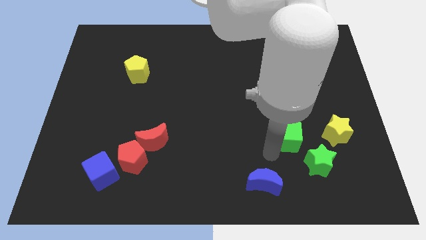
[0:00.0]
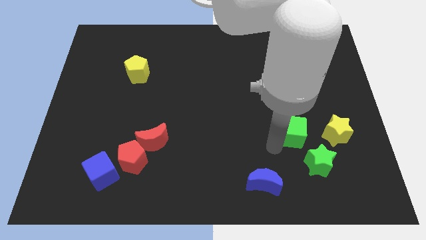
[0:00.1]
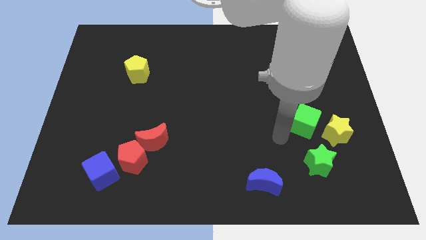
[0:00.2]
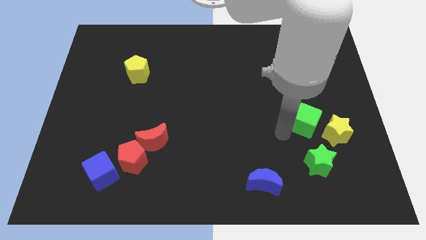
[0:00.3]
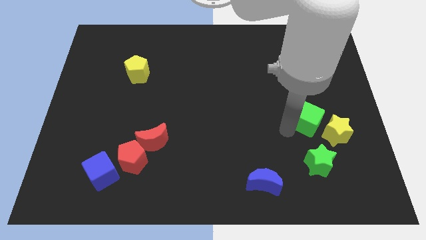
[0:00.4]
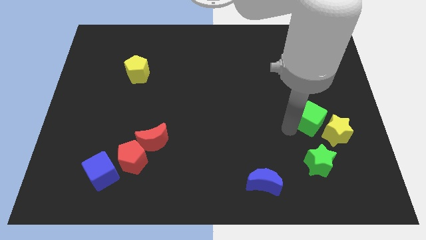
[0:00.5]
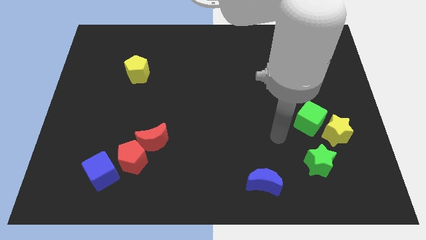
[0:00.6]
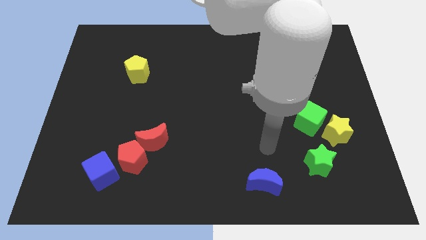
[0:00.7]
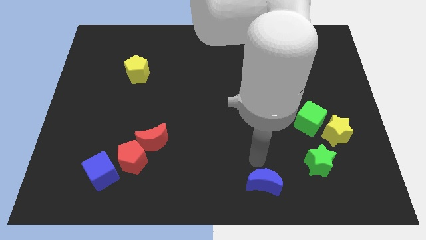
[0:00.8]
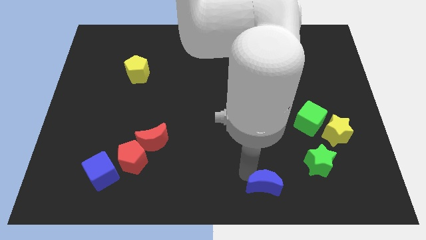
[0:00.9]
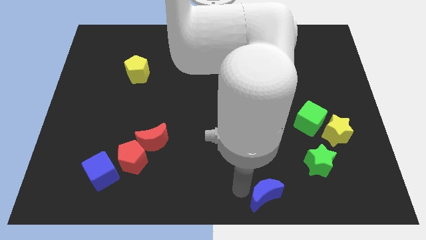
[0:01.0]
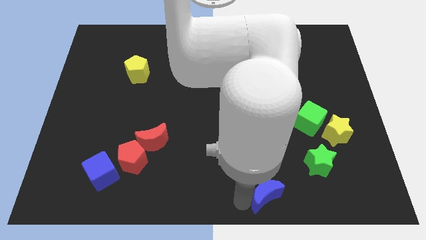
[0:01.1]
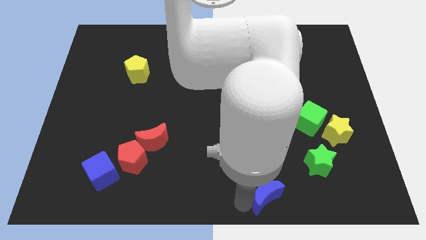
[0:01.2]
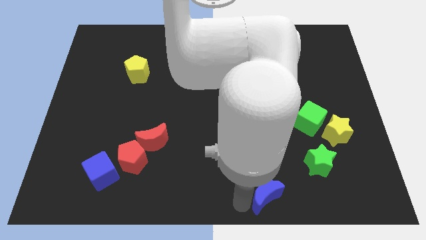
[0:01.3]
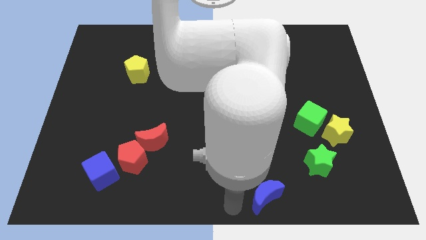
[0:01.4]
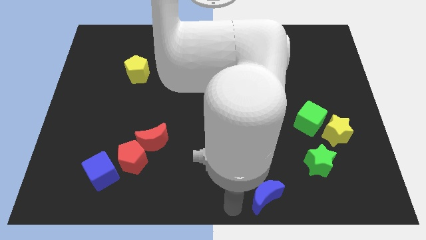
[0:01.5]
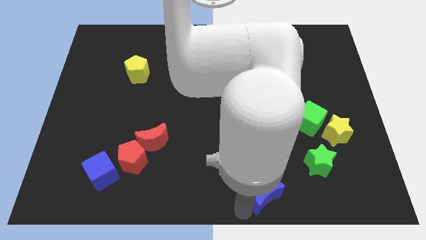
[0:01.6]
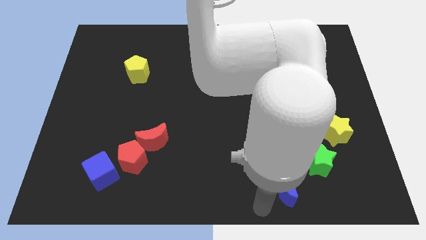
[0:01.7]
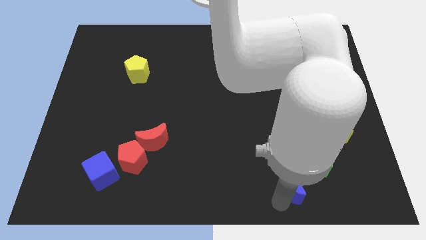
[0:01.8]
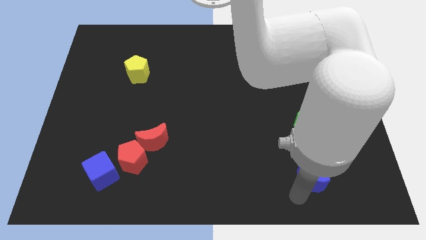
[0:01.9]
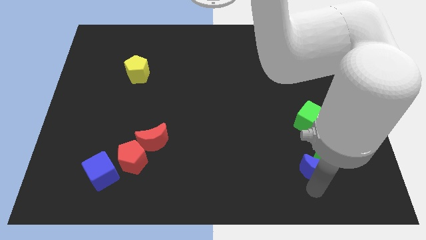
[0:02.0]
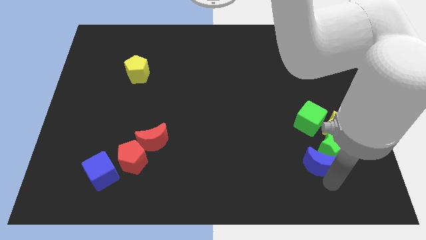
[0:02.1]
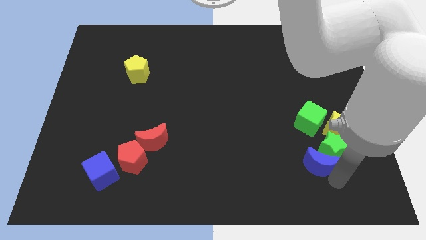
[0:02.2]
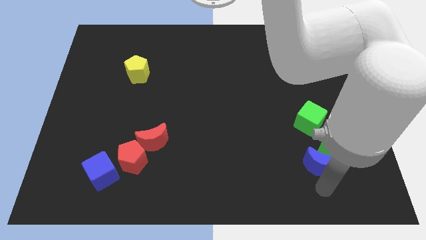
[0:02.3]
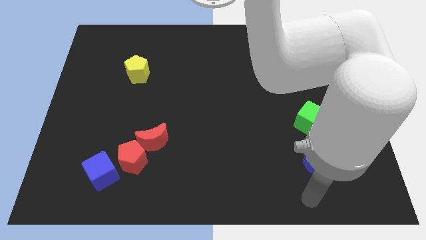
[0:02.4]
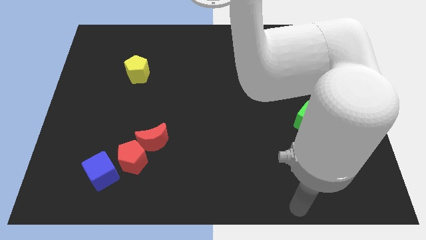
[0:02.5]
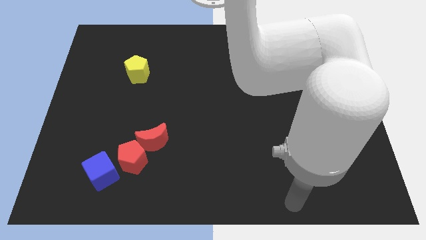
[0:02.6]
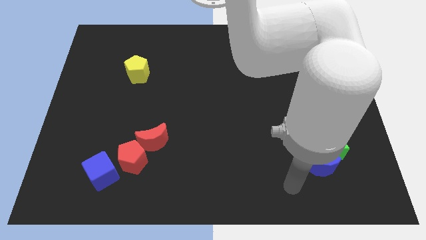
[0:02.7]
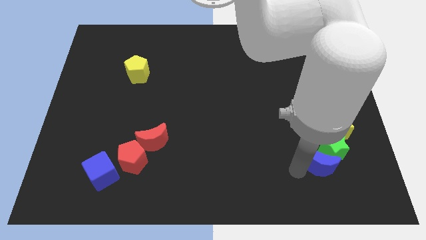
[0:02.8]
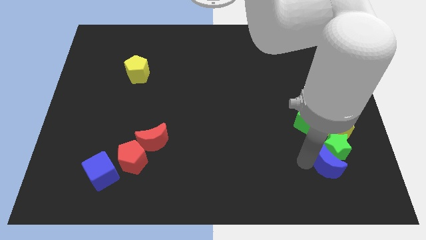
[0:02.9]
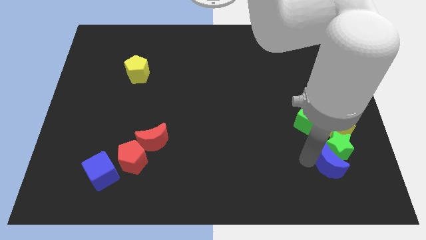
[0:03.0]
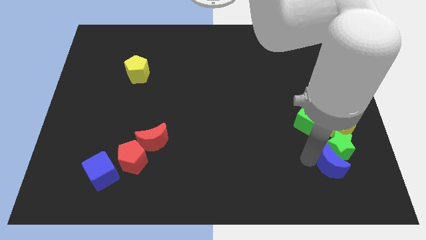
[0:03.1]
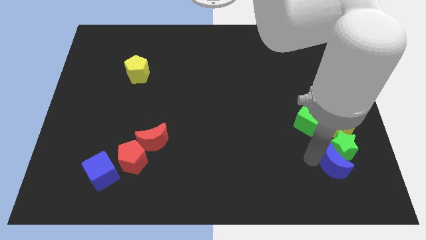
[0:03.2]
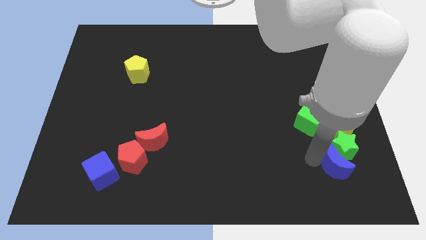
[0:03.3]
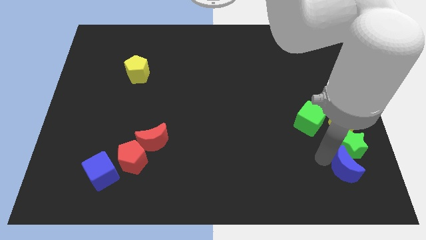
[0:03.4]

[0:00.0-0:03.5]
place the green cube to the left side of the yellow star

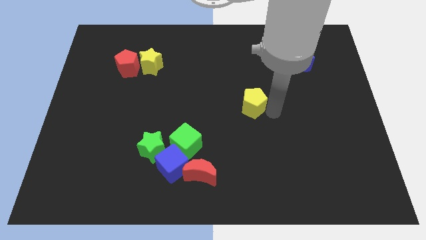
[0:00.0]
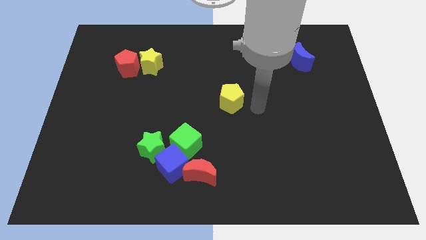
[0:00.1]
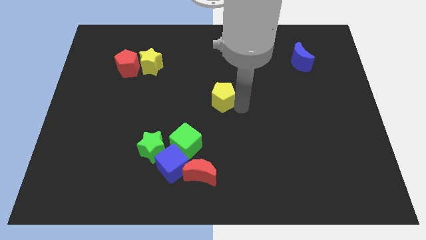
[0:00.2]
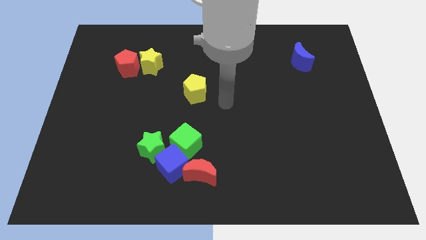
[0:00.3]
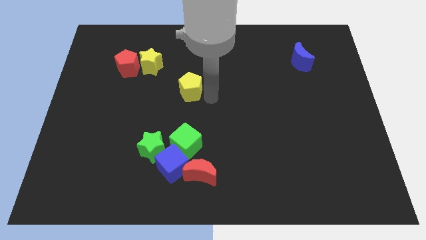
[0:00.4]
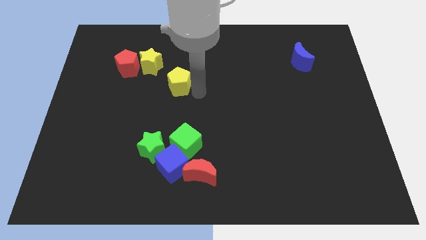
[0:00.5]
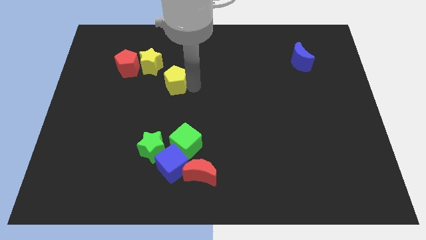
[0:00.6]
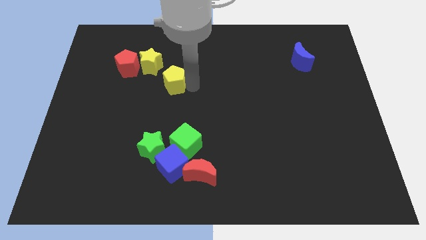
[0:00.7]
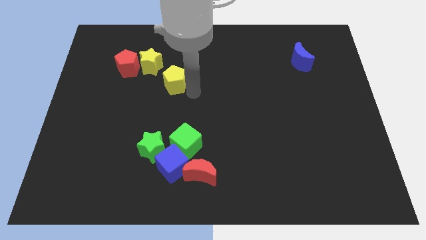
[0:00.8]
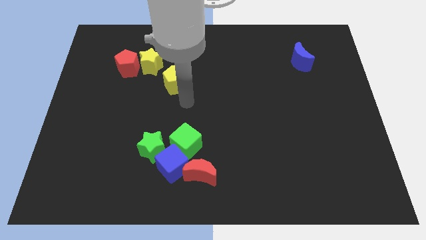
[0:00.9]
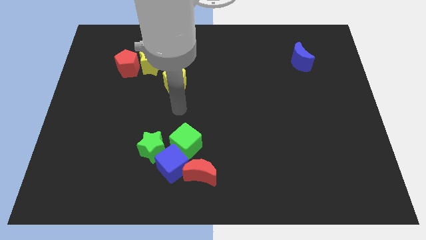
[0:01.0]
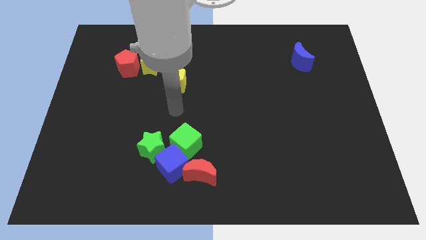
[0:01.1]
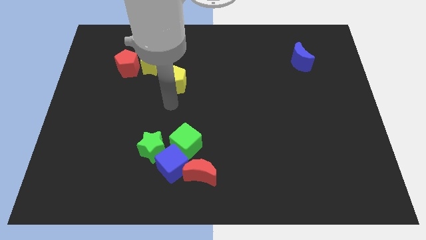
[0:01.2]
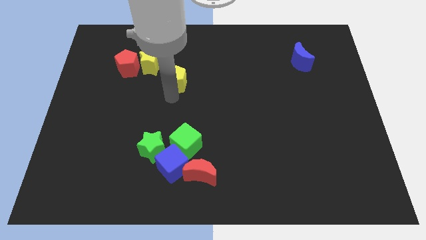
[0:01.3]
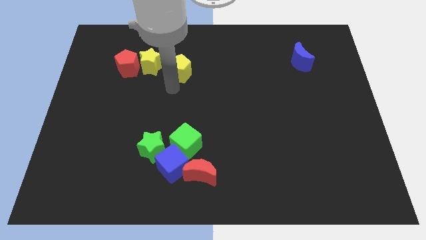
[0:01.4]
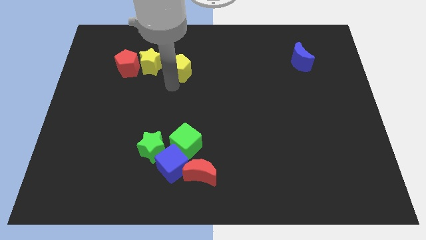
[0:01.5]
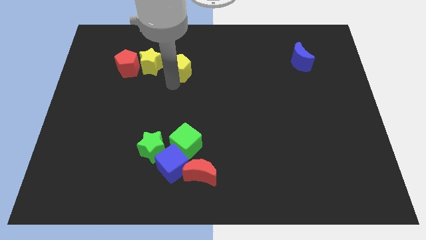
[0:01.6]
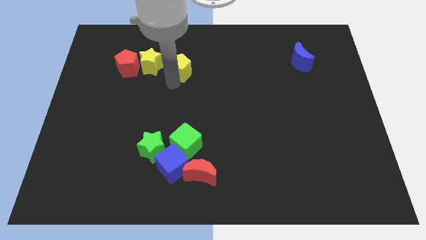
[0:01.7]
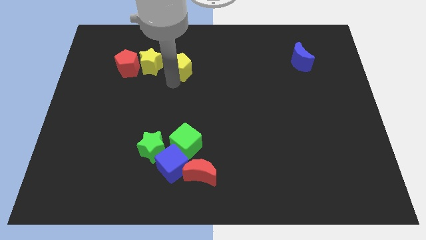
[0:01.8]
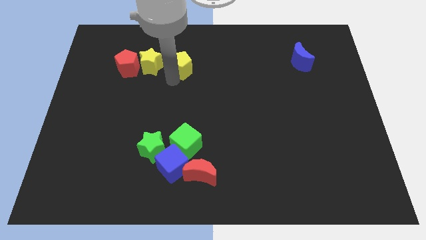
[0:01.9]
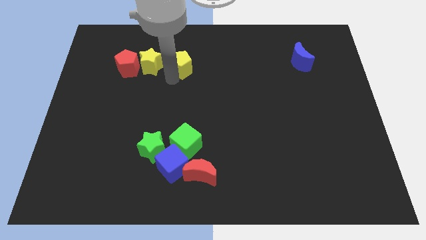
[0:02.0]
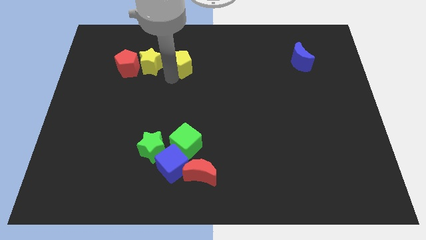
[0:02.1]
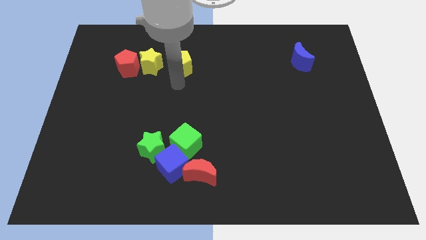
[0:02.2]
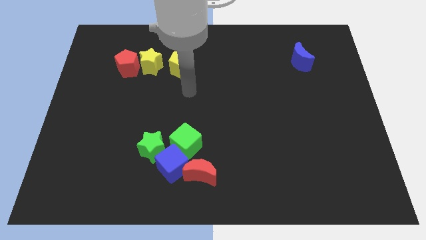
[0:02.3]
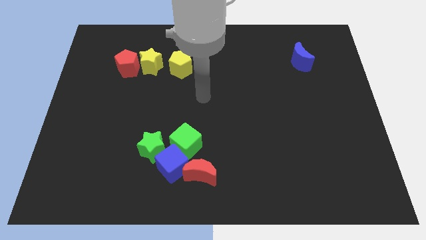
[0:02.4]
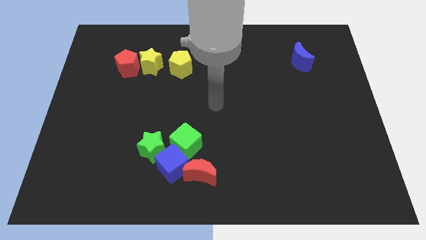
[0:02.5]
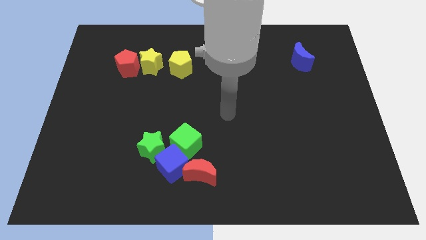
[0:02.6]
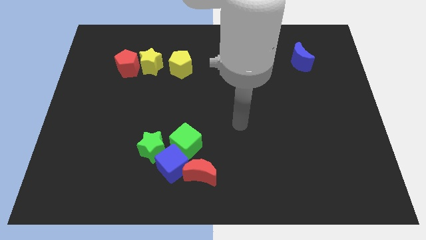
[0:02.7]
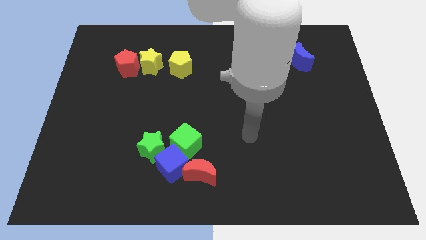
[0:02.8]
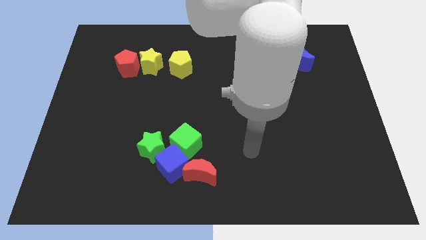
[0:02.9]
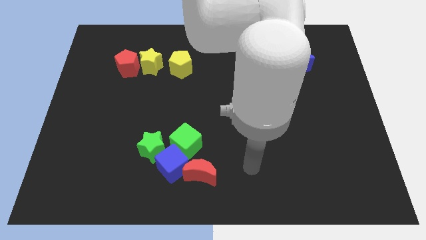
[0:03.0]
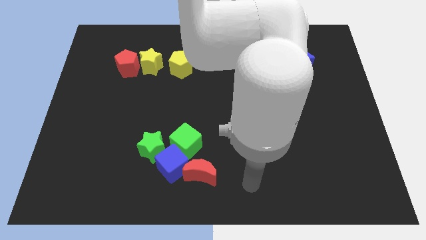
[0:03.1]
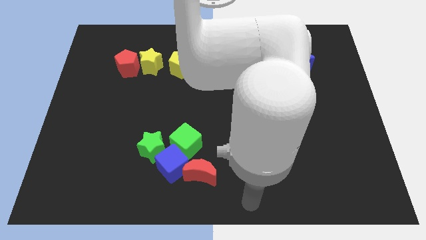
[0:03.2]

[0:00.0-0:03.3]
place the yellow pentagon to the right of the yellow star

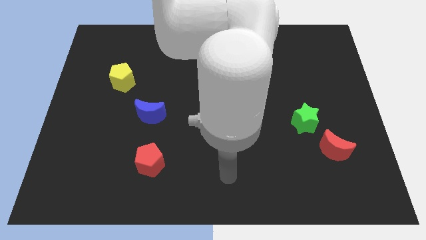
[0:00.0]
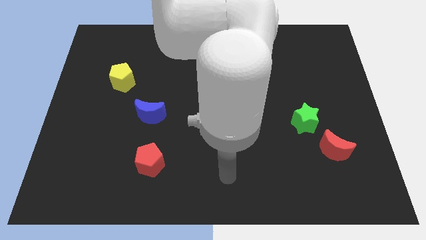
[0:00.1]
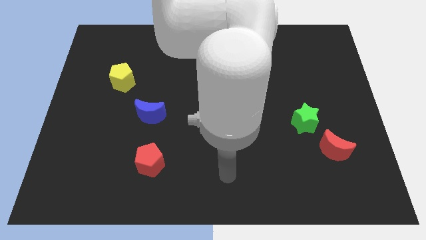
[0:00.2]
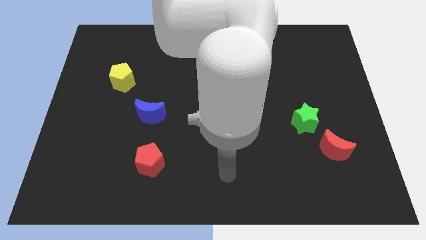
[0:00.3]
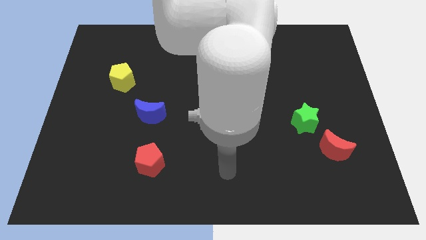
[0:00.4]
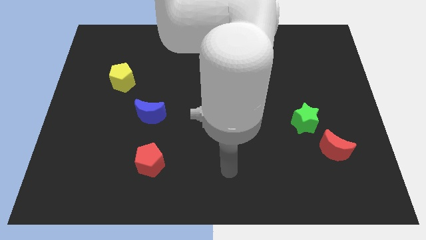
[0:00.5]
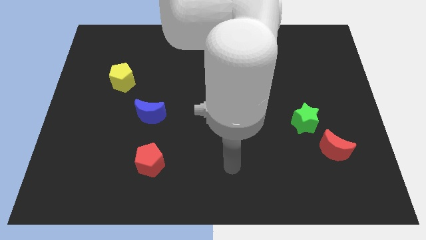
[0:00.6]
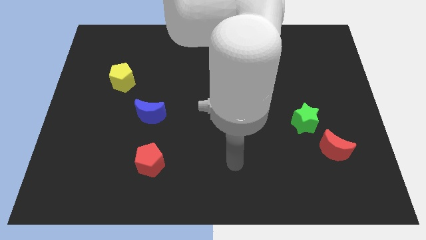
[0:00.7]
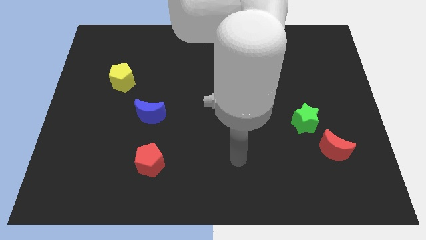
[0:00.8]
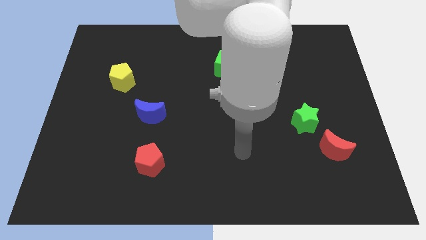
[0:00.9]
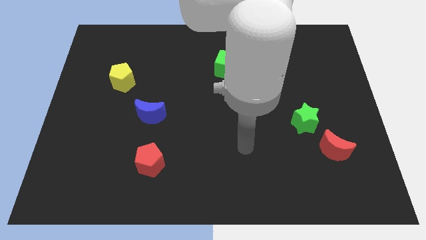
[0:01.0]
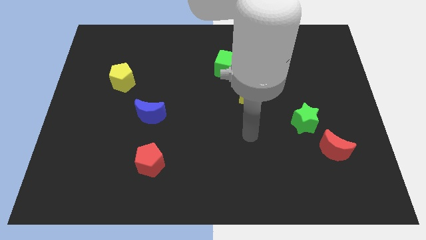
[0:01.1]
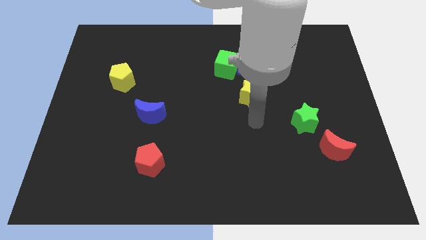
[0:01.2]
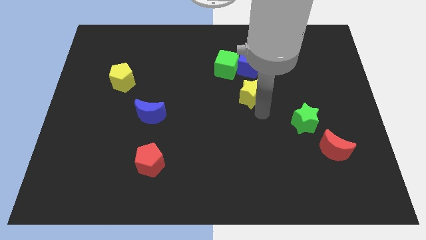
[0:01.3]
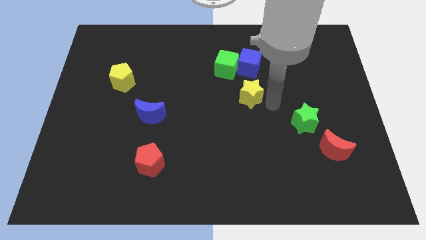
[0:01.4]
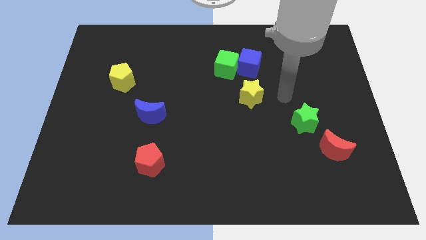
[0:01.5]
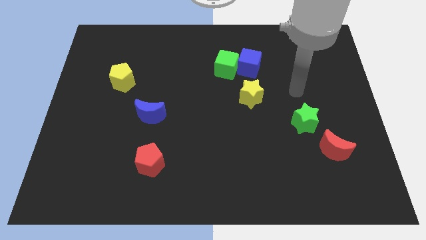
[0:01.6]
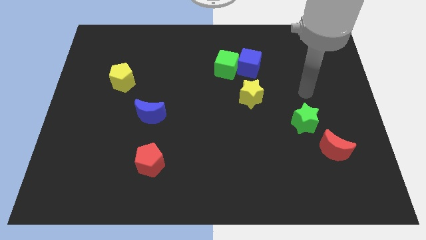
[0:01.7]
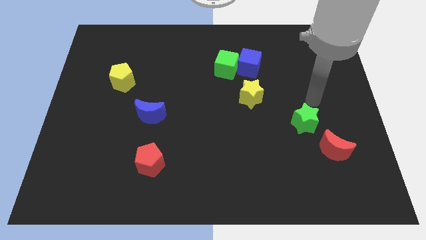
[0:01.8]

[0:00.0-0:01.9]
move your hand at the top side of the green star
